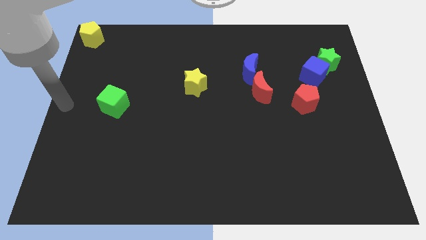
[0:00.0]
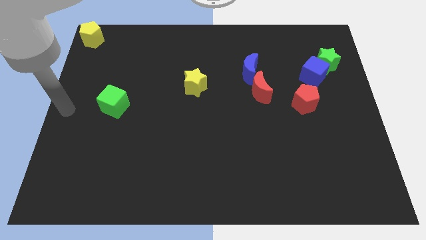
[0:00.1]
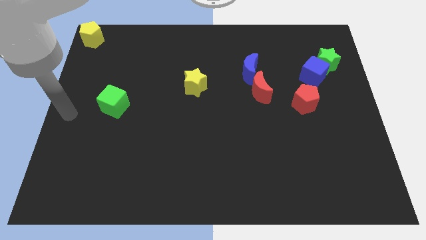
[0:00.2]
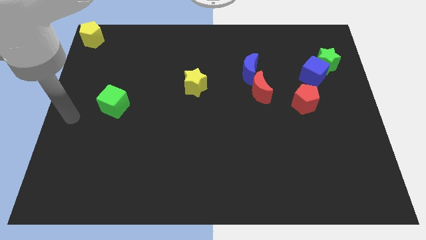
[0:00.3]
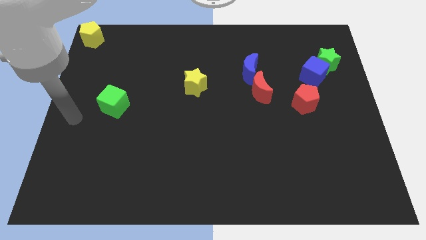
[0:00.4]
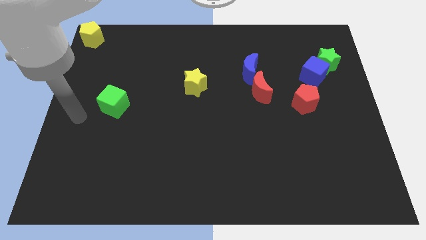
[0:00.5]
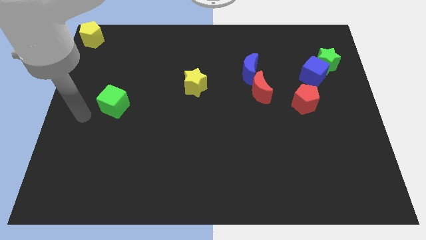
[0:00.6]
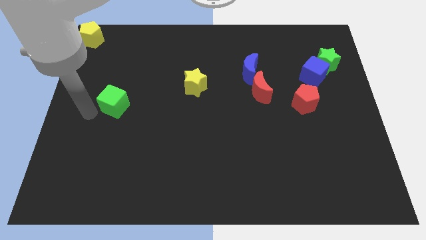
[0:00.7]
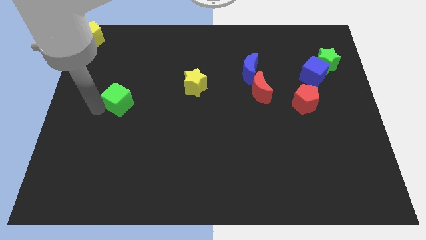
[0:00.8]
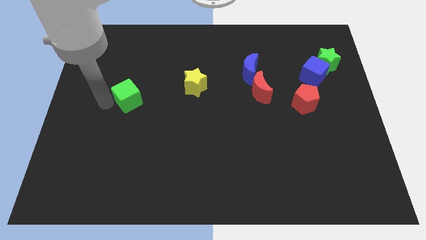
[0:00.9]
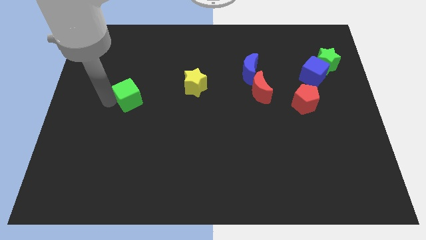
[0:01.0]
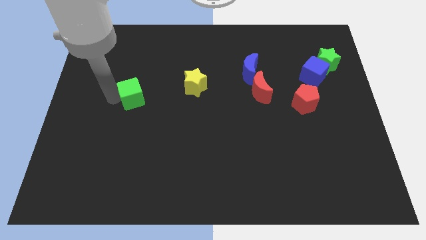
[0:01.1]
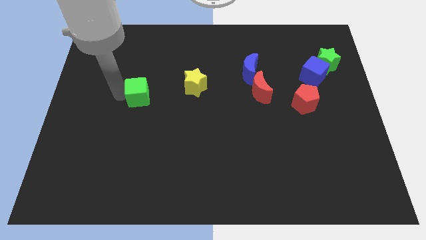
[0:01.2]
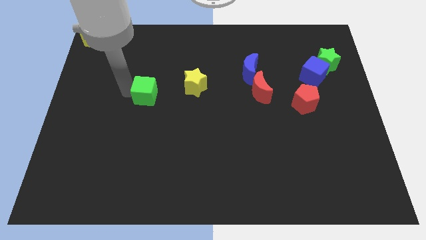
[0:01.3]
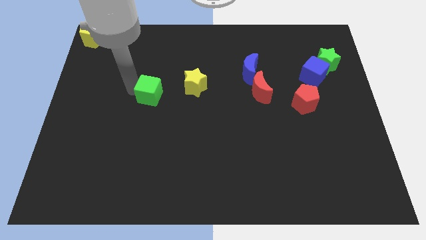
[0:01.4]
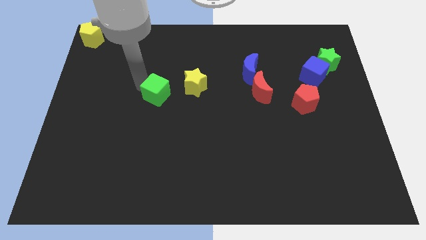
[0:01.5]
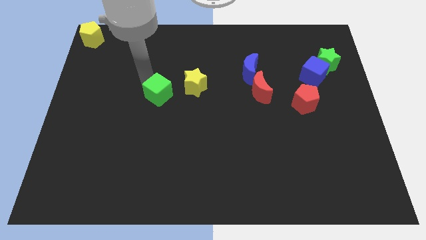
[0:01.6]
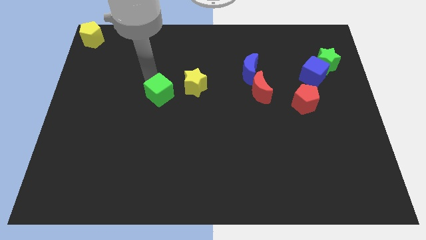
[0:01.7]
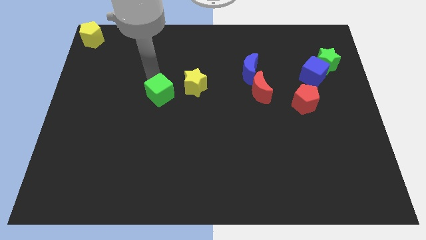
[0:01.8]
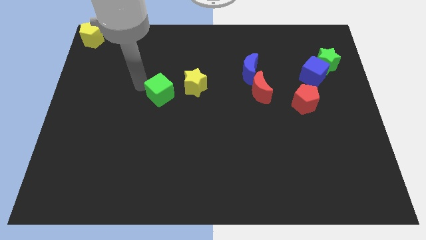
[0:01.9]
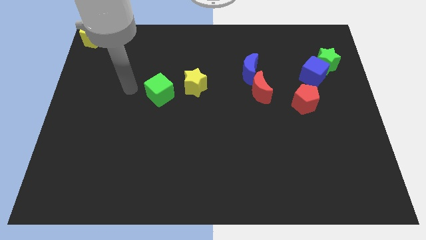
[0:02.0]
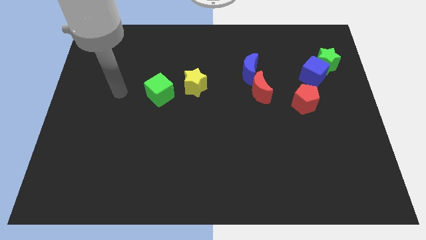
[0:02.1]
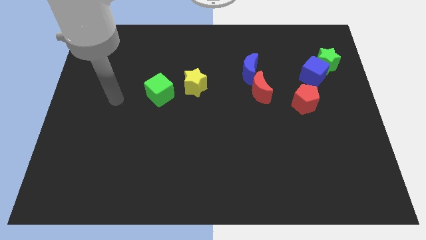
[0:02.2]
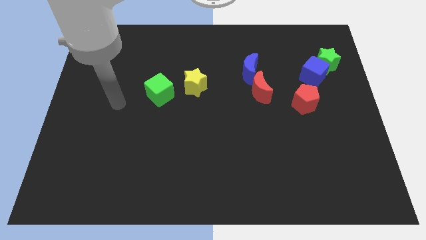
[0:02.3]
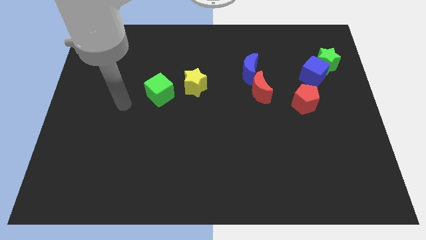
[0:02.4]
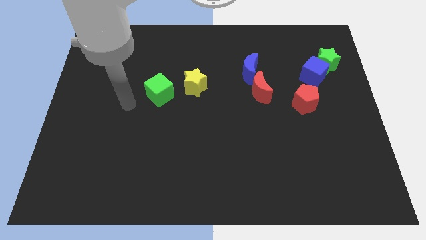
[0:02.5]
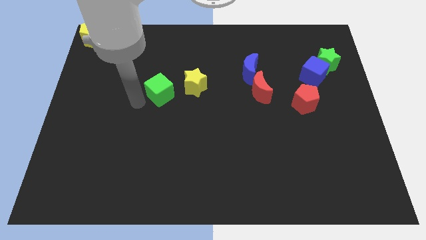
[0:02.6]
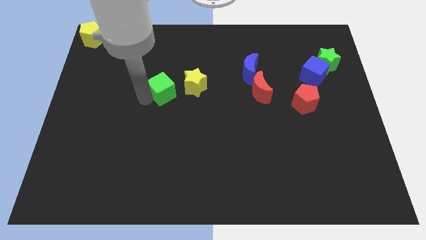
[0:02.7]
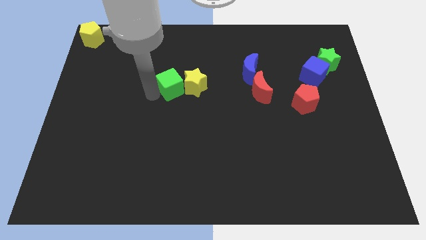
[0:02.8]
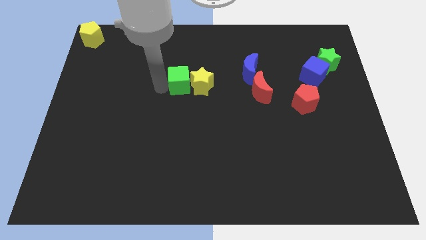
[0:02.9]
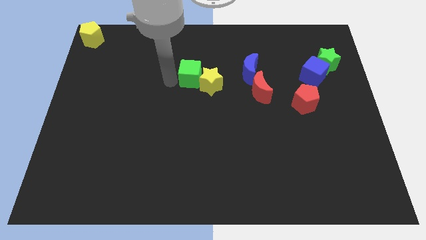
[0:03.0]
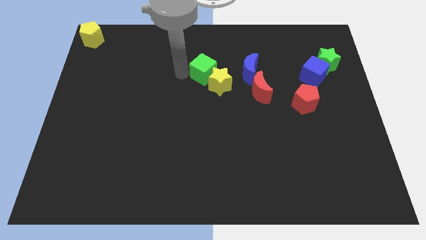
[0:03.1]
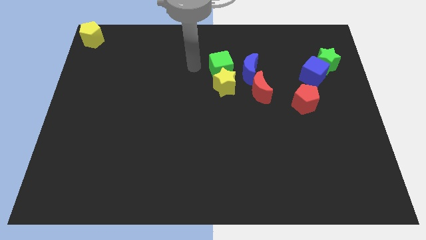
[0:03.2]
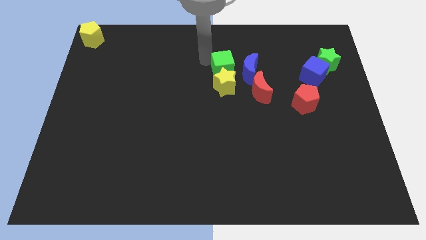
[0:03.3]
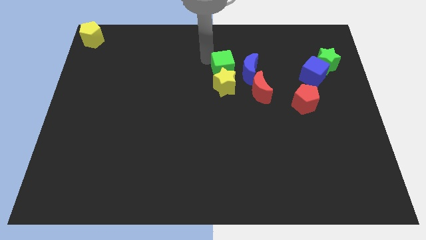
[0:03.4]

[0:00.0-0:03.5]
push the green cube into the yellow star

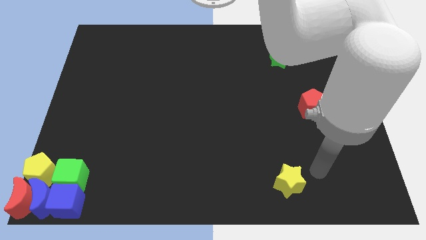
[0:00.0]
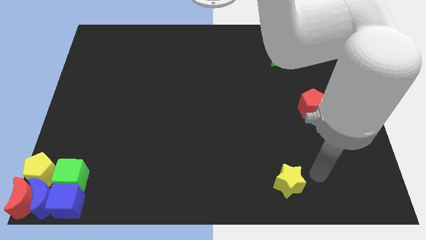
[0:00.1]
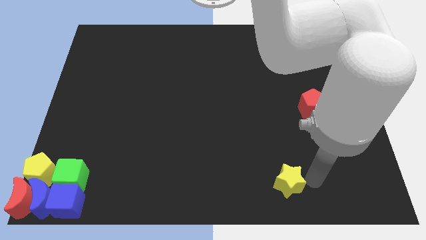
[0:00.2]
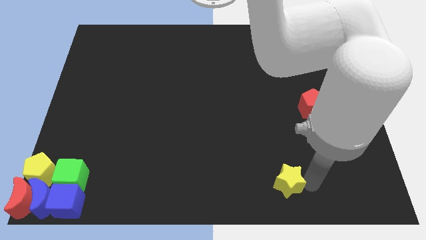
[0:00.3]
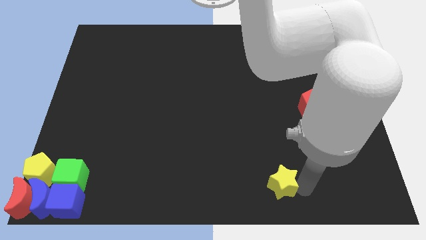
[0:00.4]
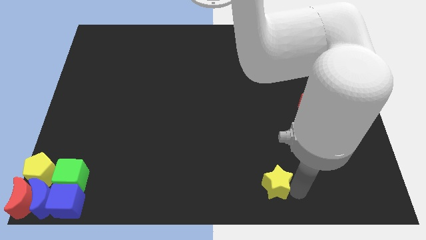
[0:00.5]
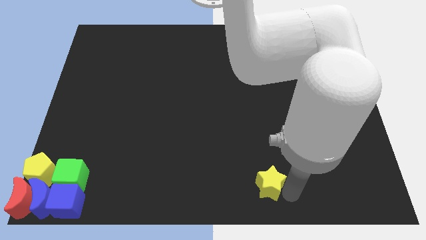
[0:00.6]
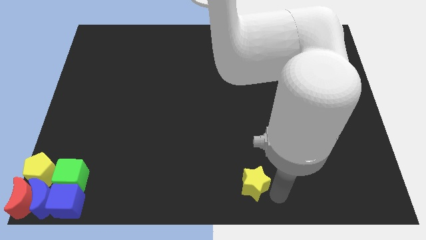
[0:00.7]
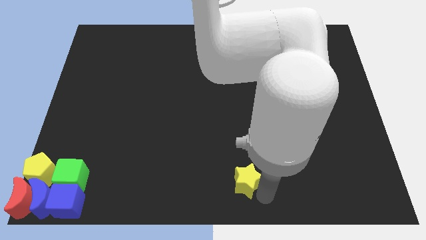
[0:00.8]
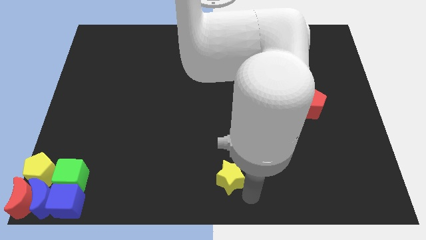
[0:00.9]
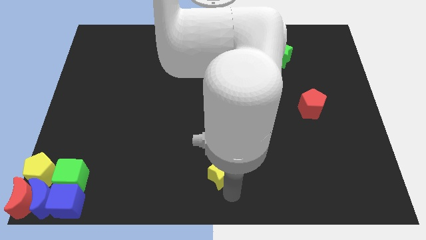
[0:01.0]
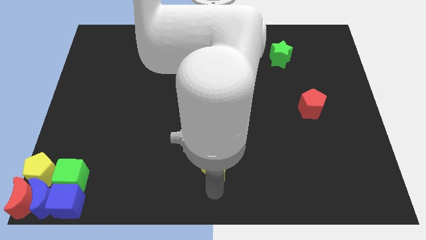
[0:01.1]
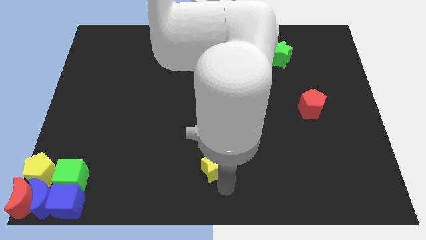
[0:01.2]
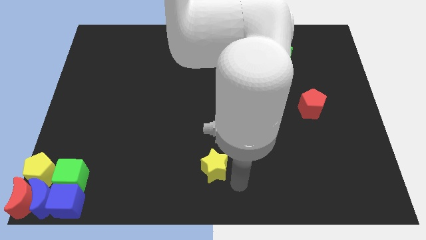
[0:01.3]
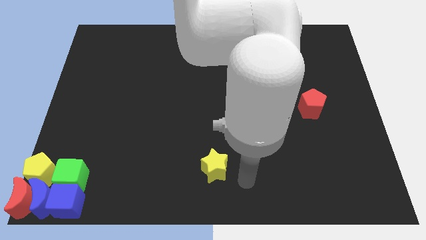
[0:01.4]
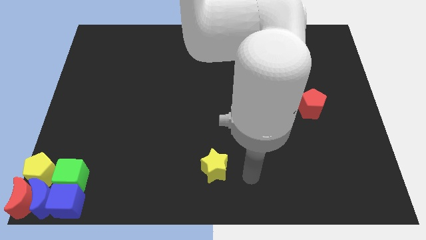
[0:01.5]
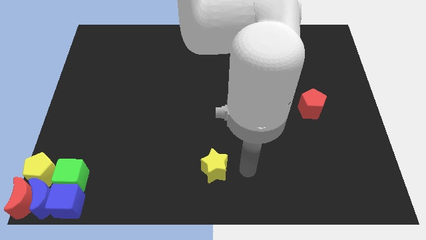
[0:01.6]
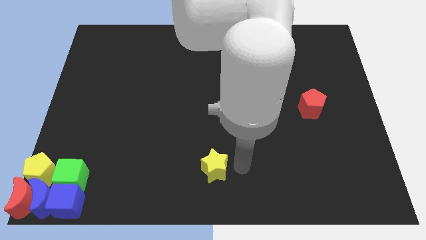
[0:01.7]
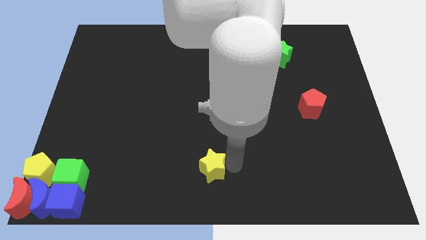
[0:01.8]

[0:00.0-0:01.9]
slide the yellow star to the bottom center of the board

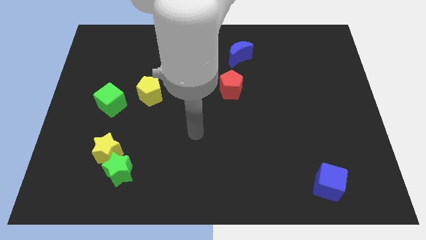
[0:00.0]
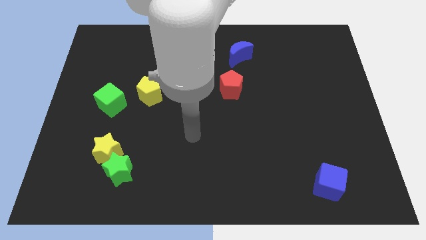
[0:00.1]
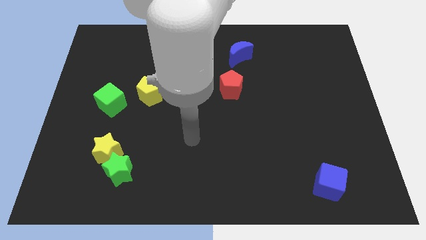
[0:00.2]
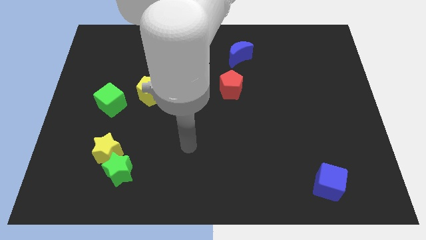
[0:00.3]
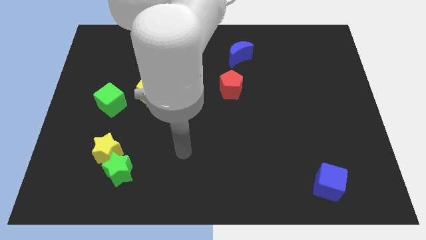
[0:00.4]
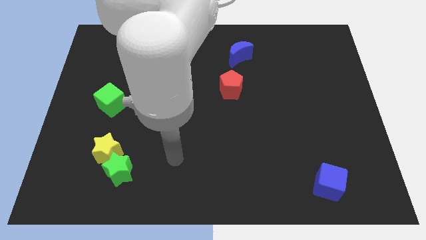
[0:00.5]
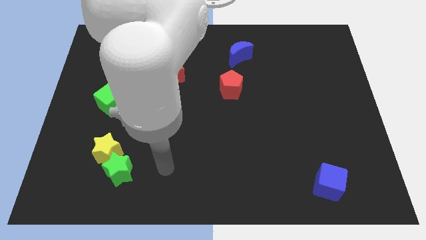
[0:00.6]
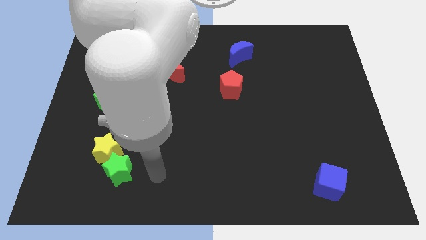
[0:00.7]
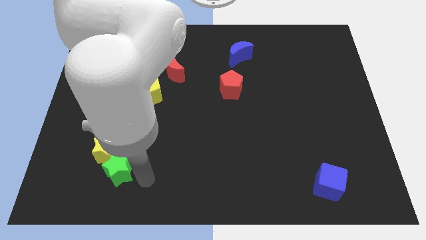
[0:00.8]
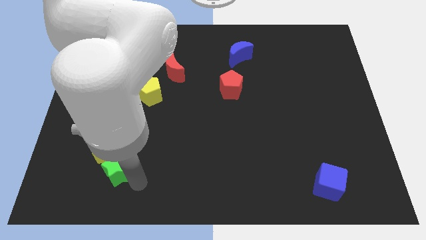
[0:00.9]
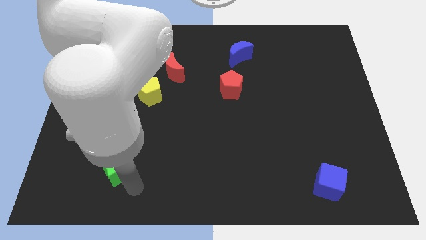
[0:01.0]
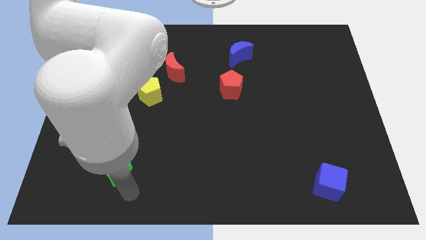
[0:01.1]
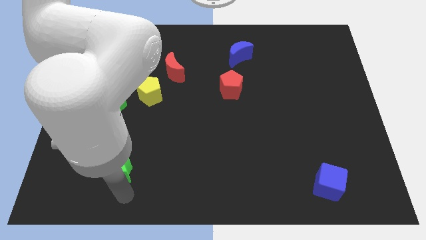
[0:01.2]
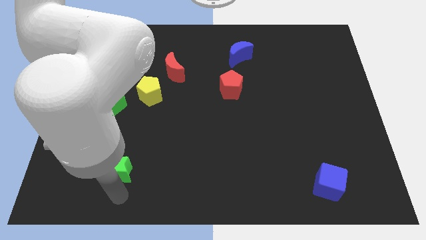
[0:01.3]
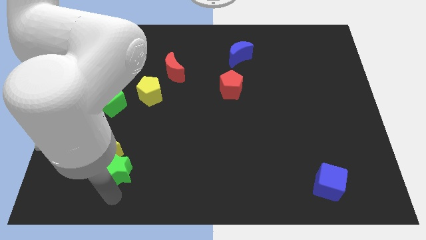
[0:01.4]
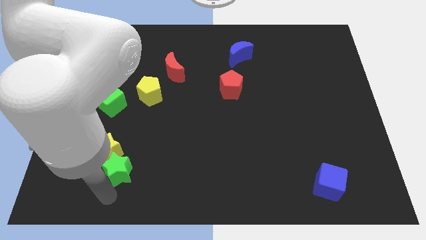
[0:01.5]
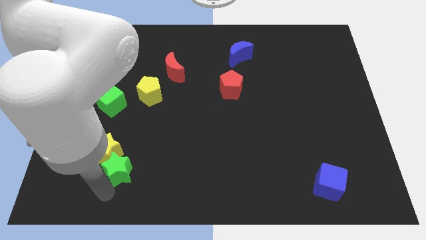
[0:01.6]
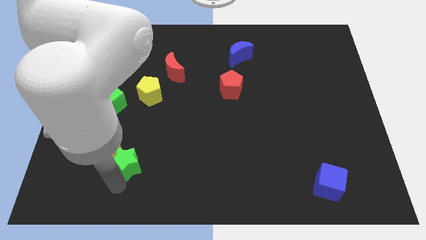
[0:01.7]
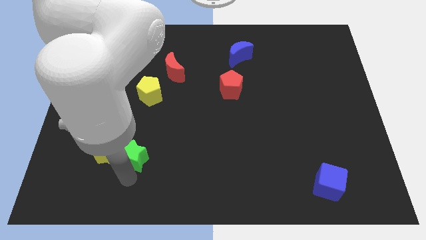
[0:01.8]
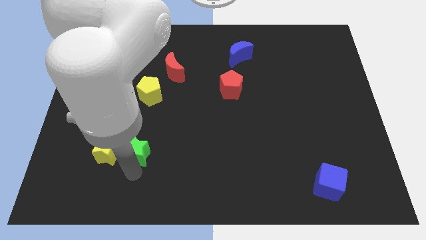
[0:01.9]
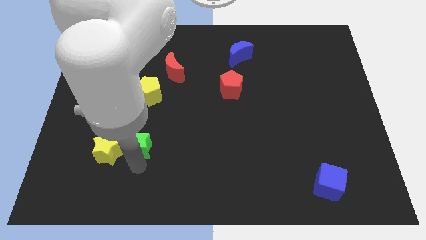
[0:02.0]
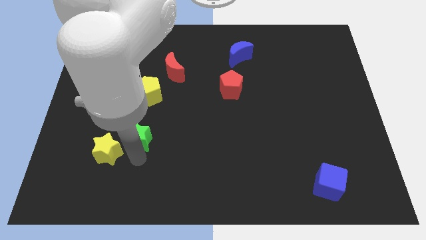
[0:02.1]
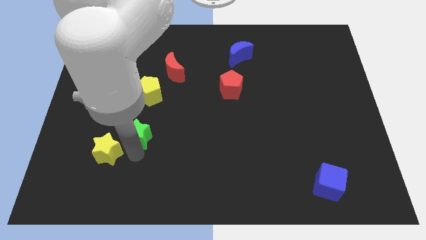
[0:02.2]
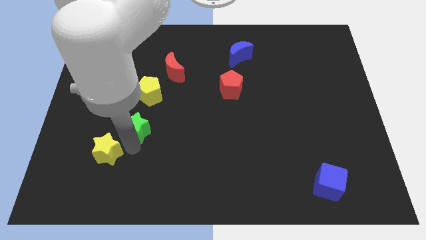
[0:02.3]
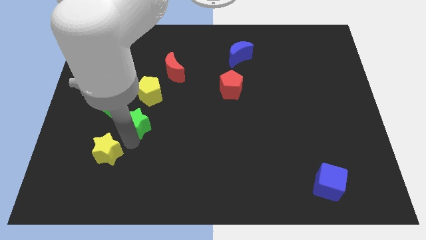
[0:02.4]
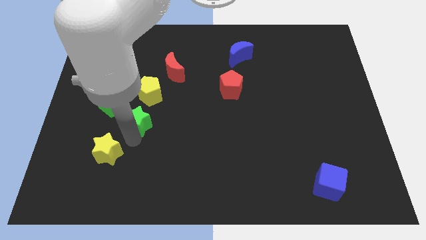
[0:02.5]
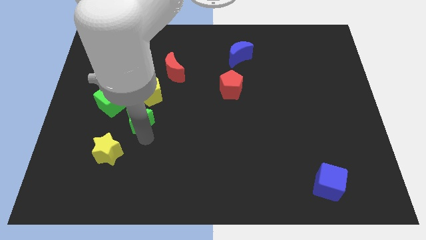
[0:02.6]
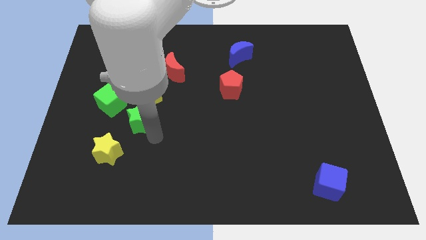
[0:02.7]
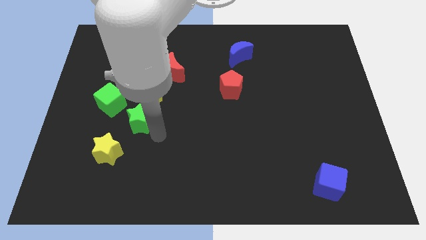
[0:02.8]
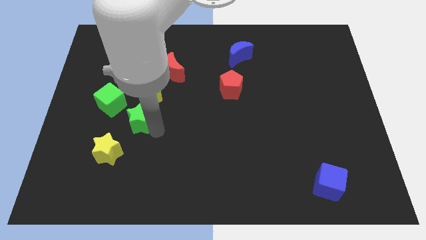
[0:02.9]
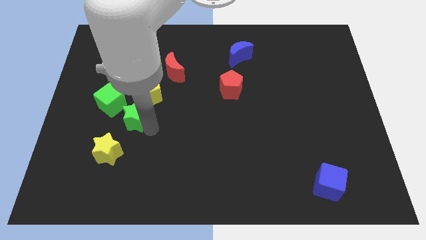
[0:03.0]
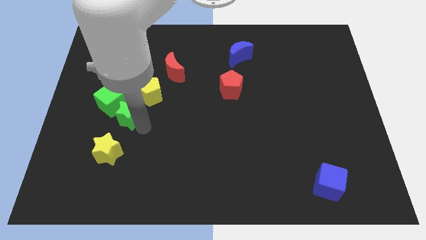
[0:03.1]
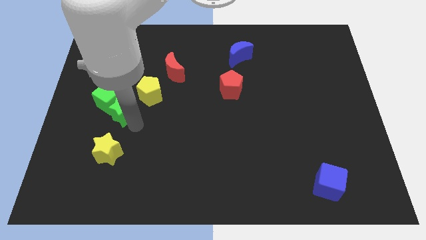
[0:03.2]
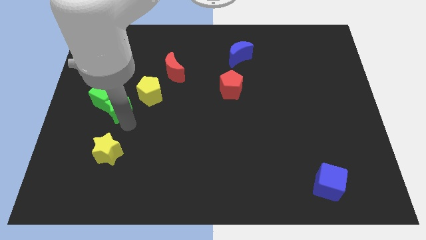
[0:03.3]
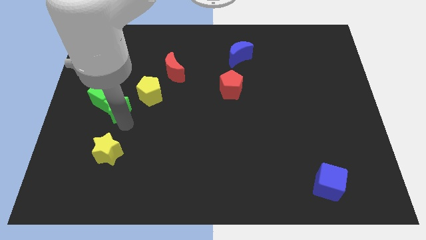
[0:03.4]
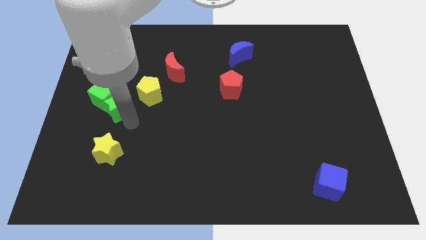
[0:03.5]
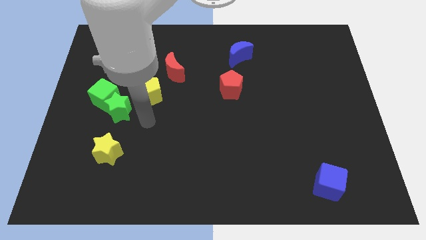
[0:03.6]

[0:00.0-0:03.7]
push the green star into the green cube
